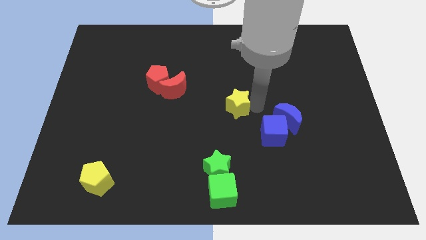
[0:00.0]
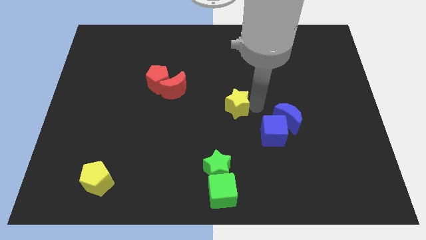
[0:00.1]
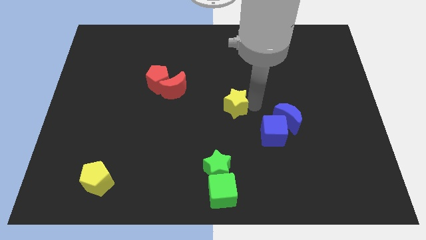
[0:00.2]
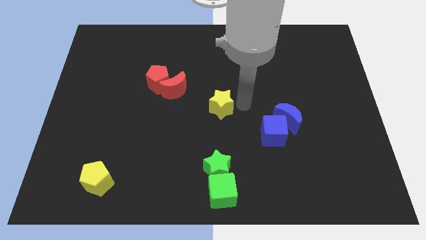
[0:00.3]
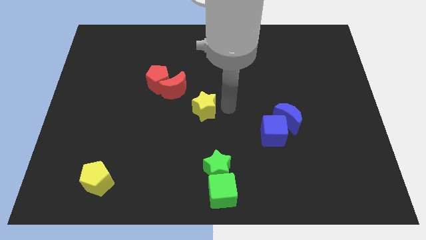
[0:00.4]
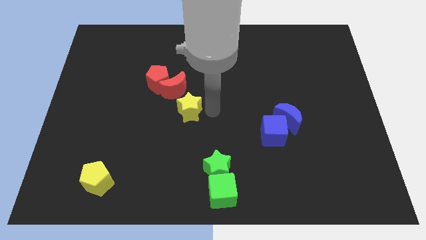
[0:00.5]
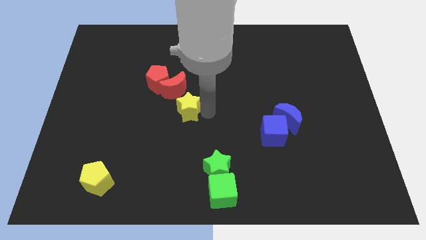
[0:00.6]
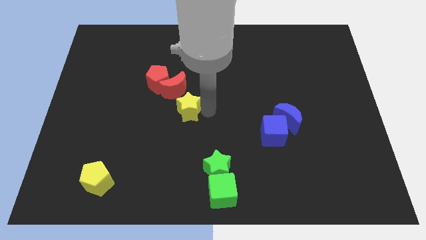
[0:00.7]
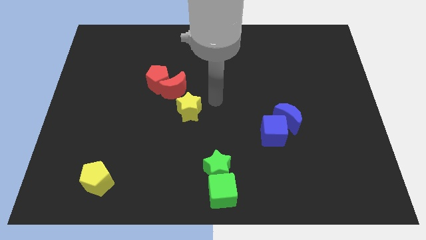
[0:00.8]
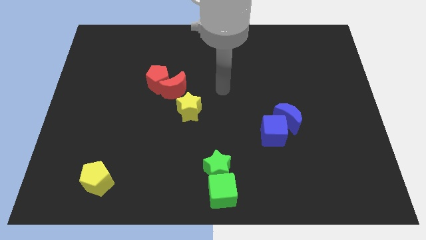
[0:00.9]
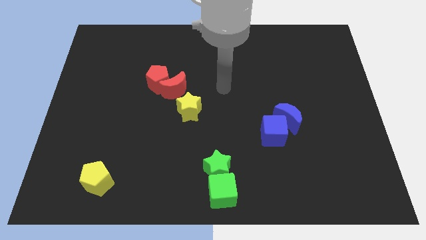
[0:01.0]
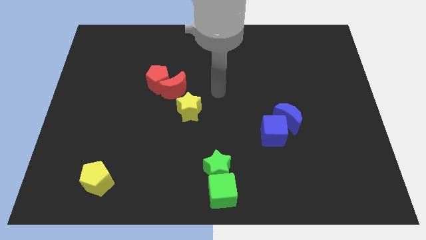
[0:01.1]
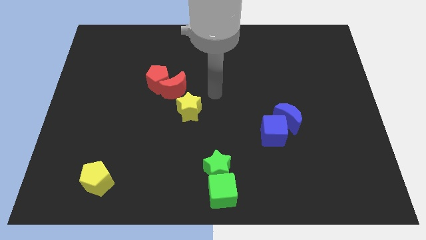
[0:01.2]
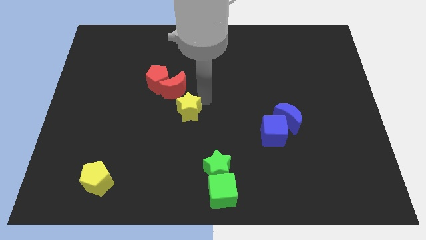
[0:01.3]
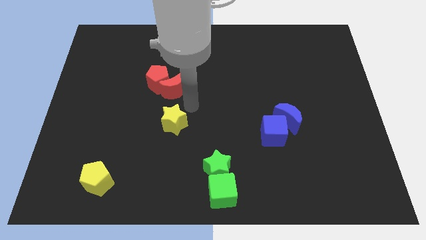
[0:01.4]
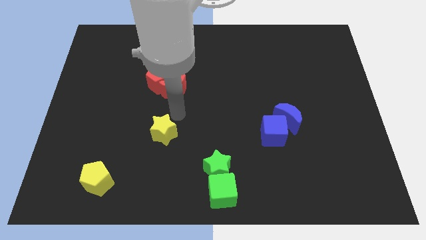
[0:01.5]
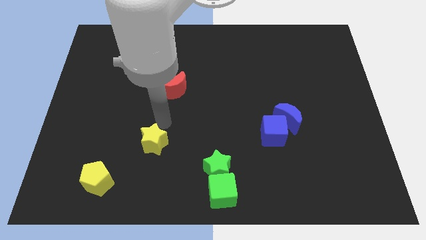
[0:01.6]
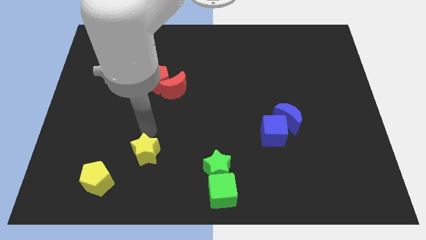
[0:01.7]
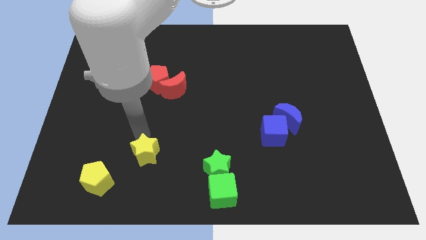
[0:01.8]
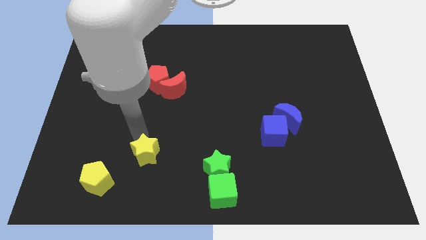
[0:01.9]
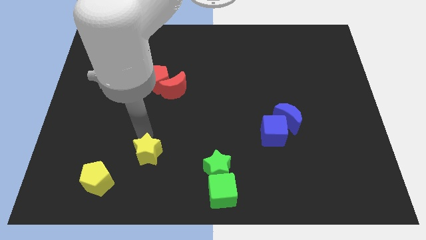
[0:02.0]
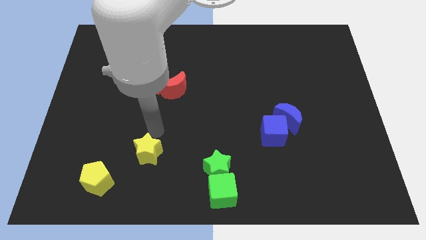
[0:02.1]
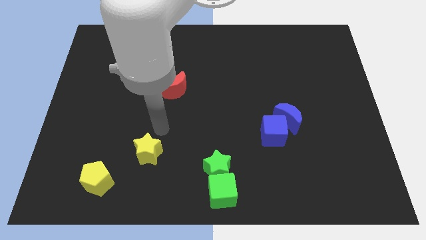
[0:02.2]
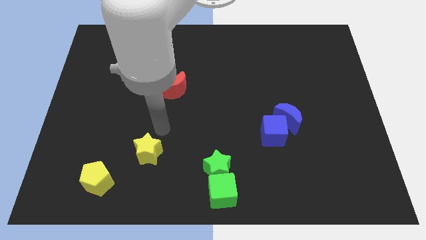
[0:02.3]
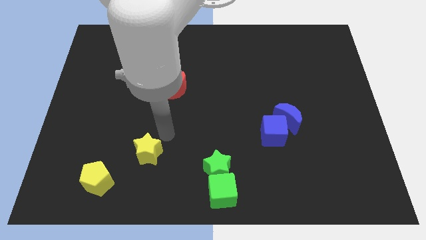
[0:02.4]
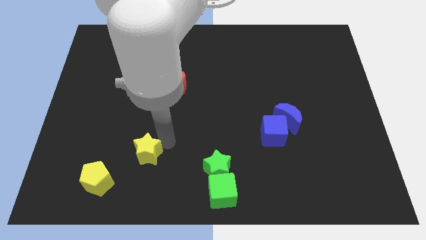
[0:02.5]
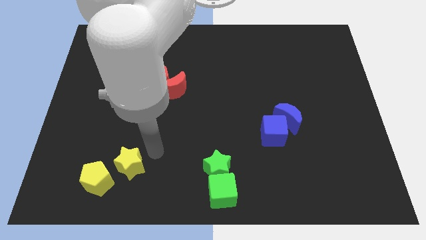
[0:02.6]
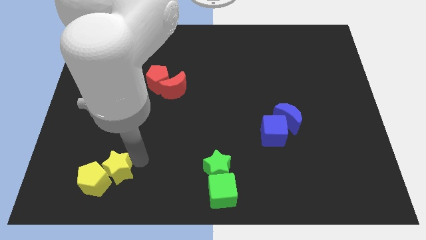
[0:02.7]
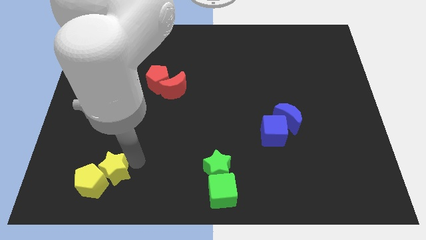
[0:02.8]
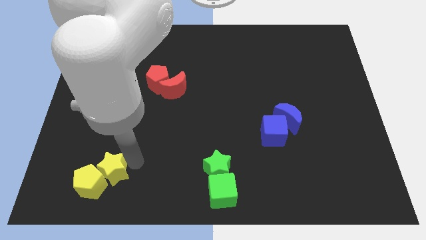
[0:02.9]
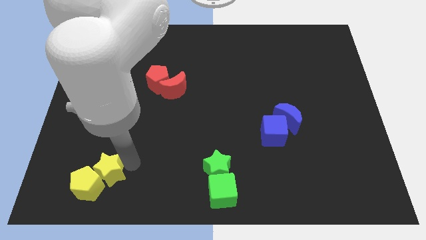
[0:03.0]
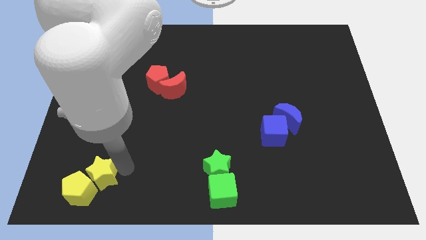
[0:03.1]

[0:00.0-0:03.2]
slide the yellow star into the yellow pentagon

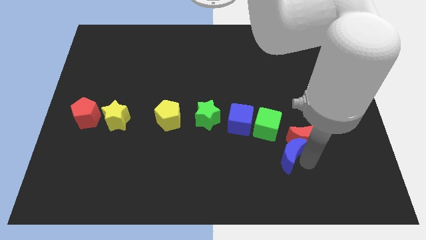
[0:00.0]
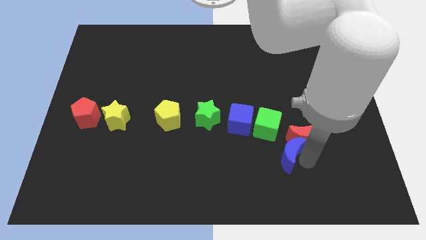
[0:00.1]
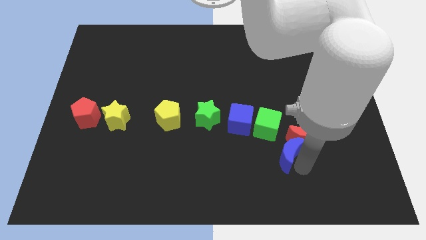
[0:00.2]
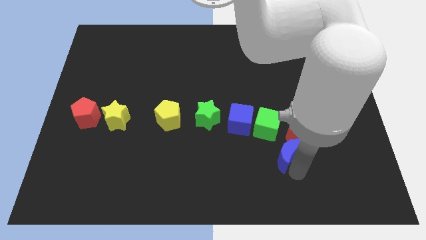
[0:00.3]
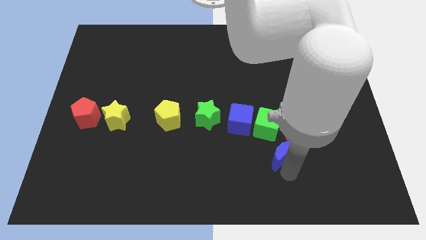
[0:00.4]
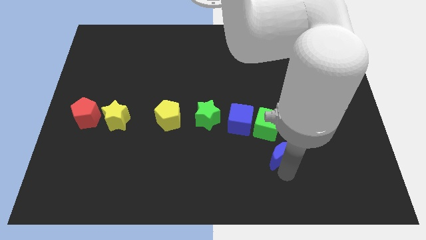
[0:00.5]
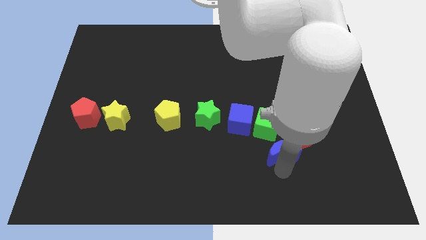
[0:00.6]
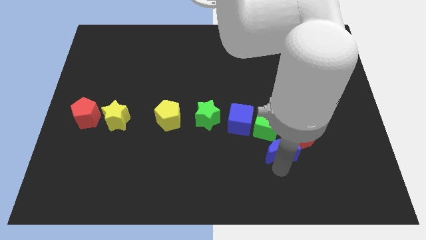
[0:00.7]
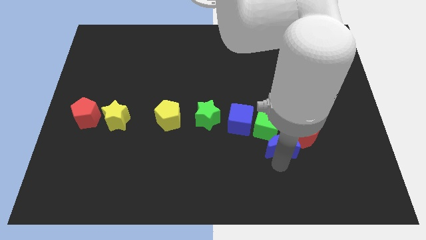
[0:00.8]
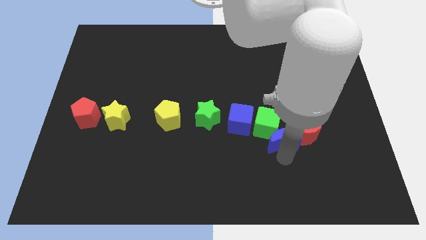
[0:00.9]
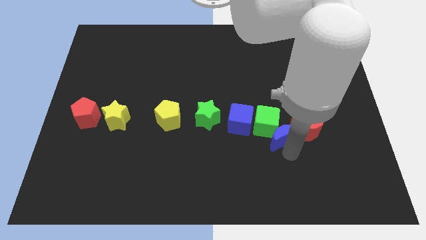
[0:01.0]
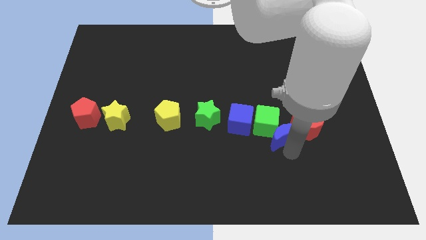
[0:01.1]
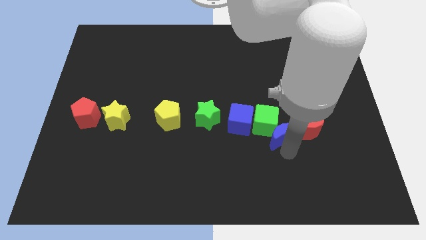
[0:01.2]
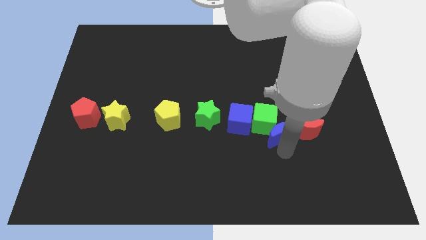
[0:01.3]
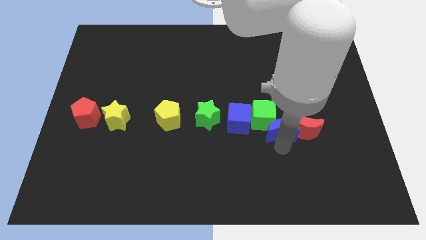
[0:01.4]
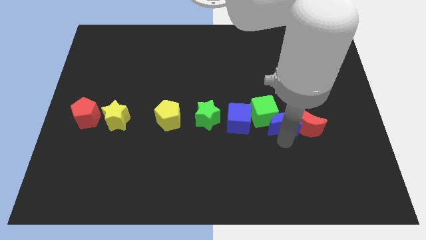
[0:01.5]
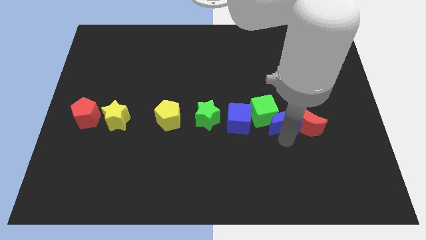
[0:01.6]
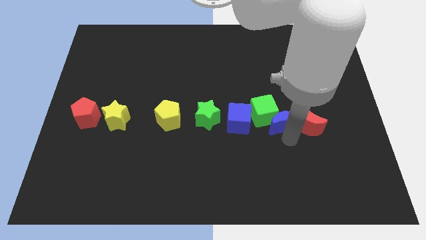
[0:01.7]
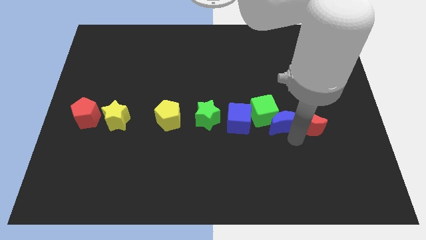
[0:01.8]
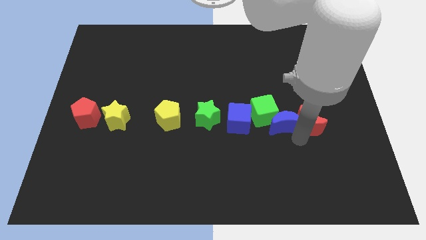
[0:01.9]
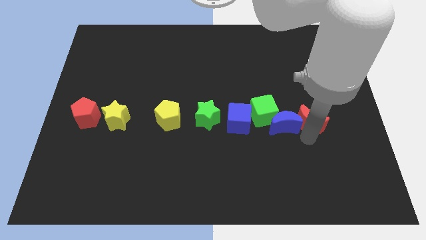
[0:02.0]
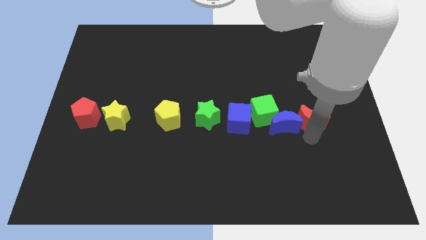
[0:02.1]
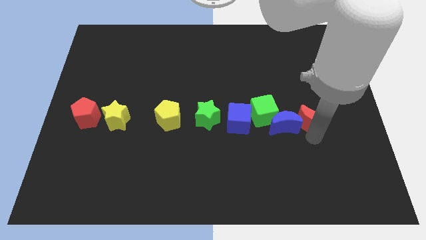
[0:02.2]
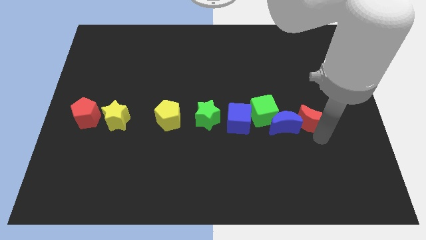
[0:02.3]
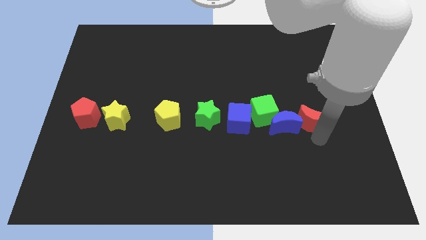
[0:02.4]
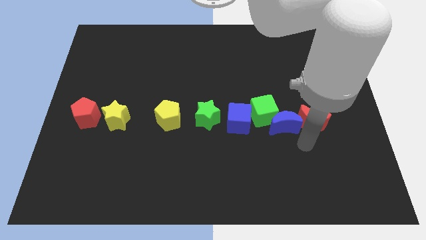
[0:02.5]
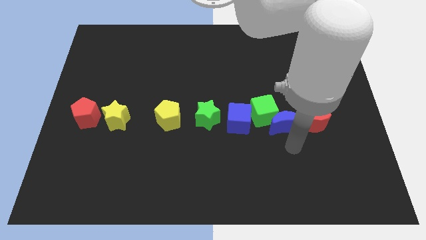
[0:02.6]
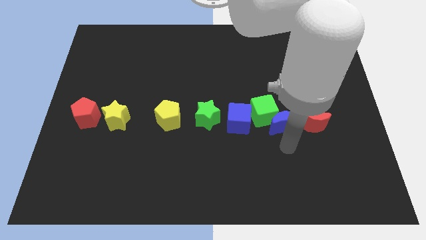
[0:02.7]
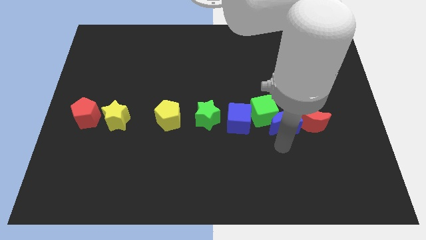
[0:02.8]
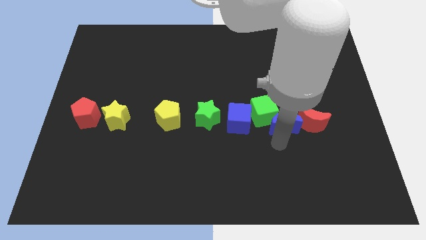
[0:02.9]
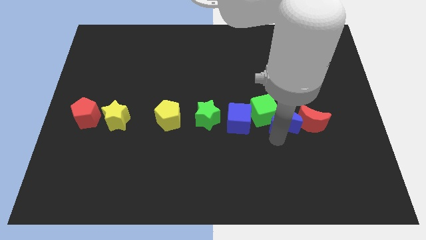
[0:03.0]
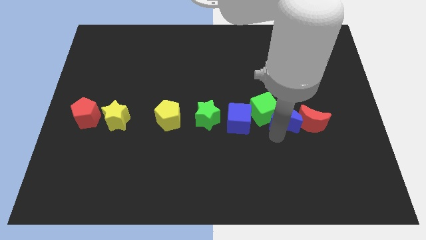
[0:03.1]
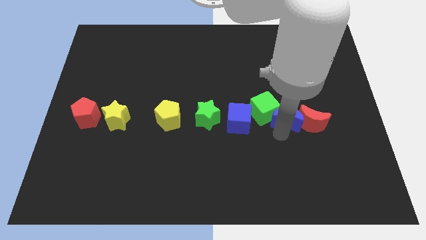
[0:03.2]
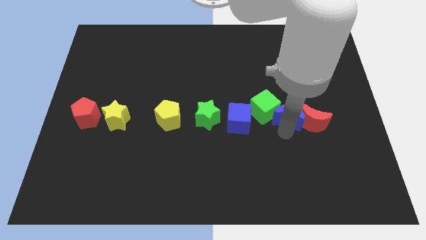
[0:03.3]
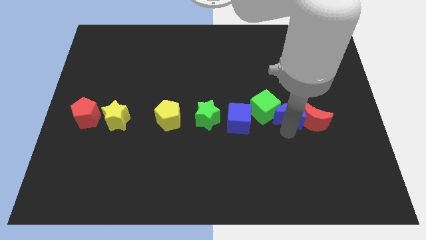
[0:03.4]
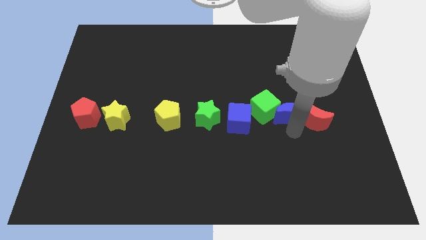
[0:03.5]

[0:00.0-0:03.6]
push blue crescent at the bottom of red moon and green cube

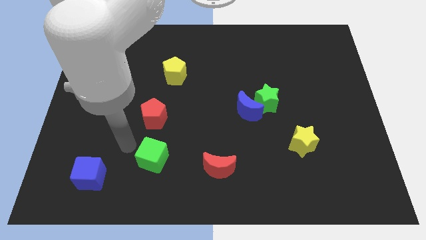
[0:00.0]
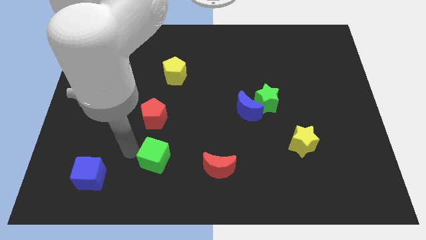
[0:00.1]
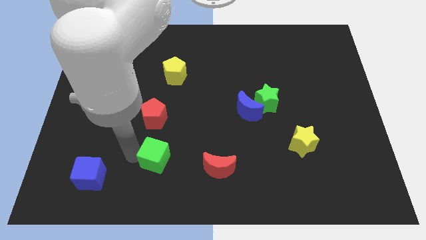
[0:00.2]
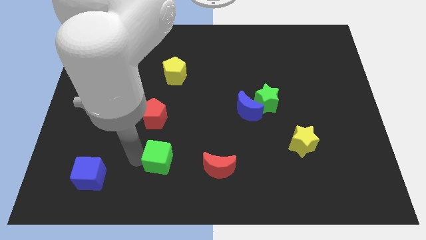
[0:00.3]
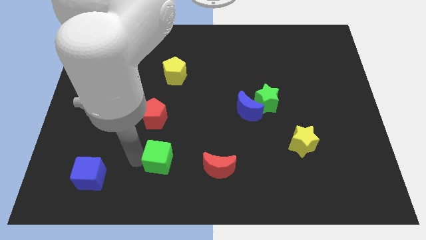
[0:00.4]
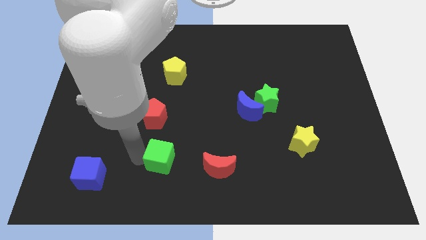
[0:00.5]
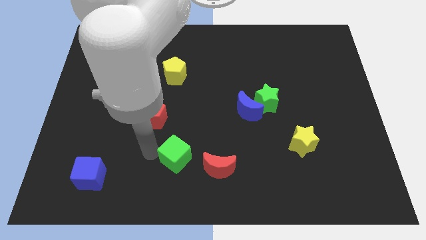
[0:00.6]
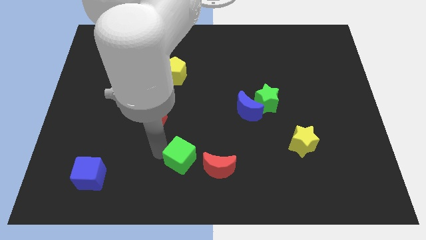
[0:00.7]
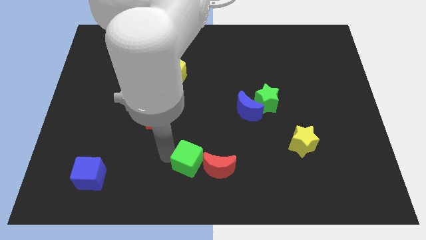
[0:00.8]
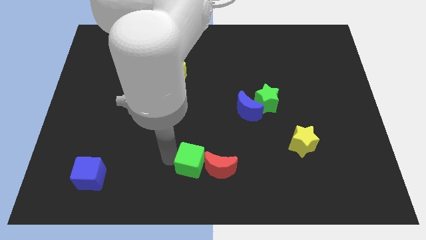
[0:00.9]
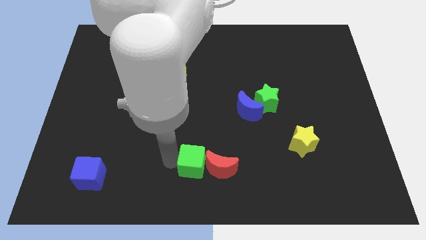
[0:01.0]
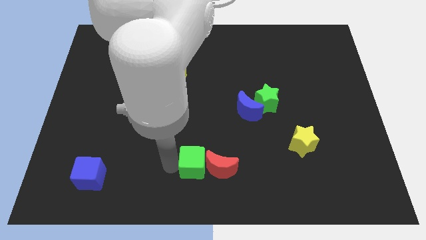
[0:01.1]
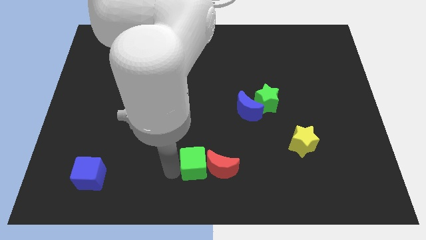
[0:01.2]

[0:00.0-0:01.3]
push the green cube into the red crescent

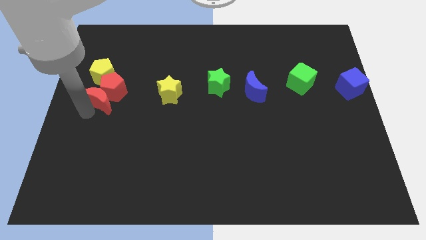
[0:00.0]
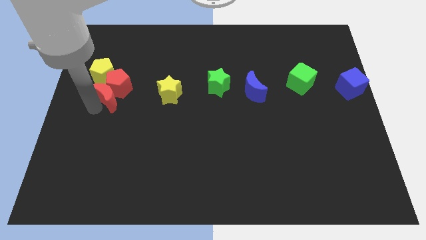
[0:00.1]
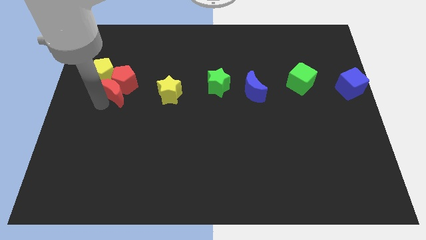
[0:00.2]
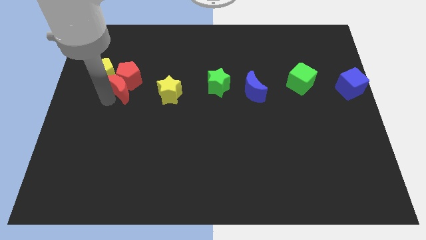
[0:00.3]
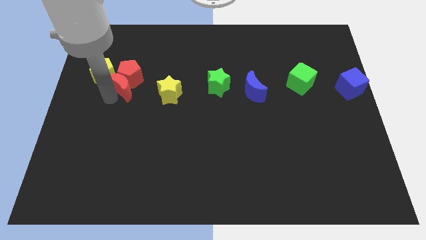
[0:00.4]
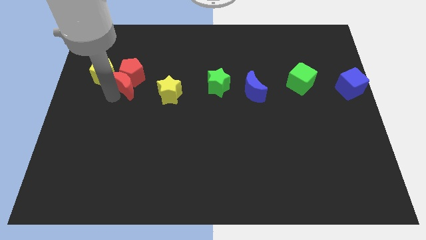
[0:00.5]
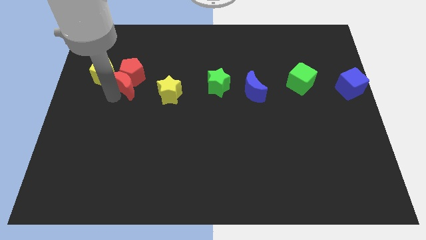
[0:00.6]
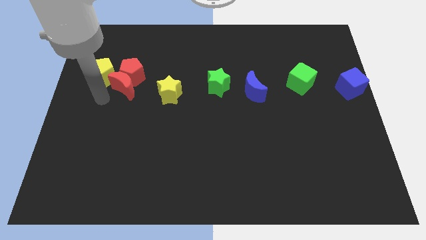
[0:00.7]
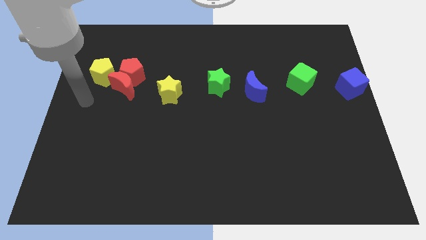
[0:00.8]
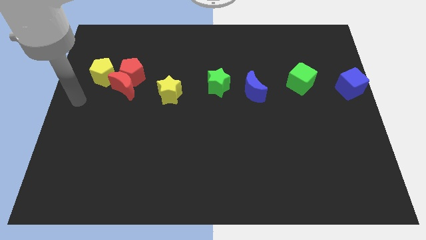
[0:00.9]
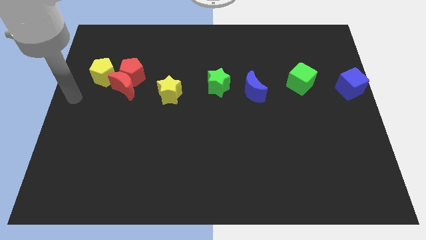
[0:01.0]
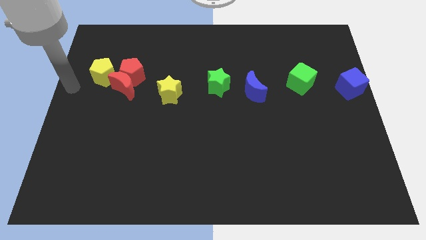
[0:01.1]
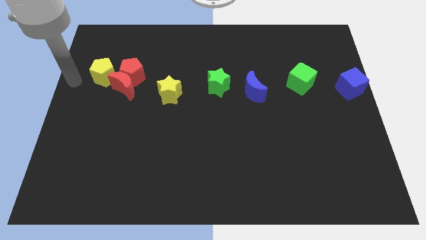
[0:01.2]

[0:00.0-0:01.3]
push red blocks right to the yellow pentagon
